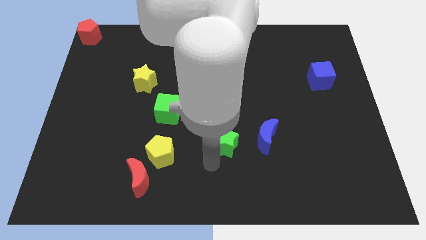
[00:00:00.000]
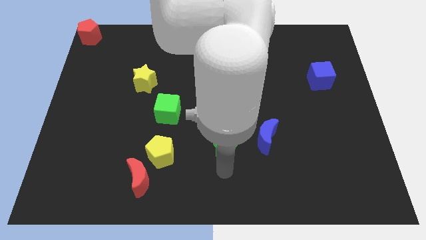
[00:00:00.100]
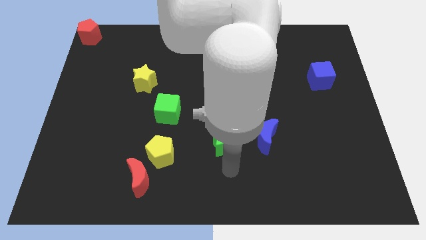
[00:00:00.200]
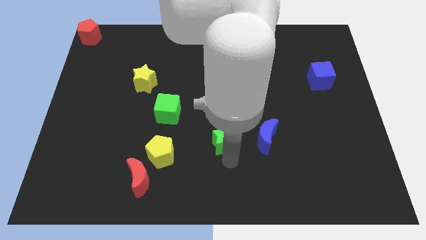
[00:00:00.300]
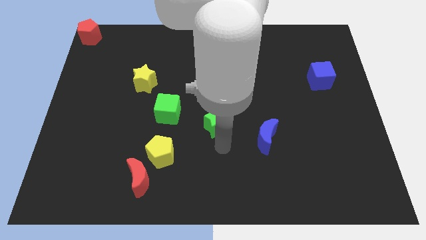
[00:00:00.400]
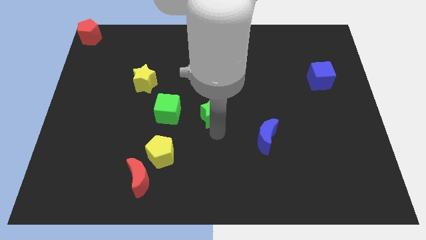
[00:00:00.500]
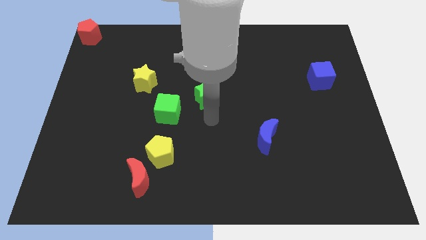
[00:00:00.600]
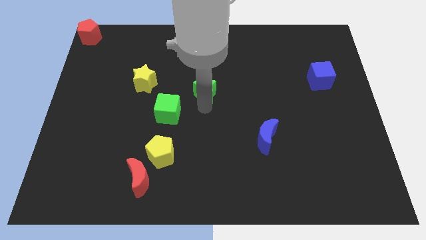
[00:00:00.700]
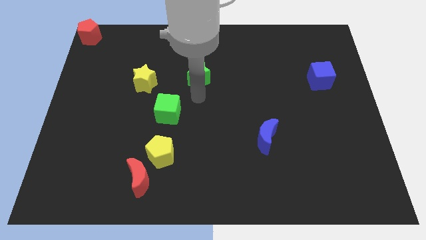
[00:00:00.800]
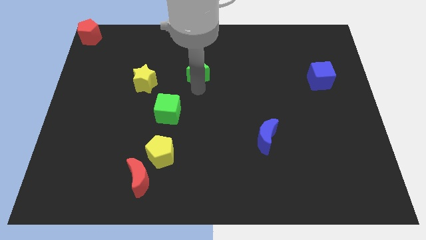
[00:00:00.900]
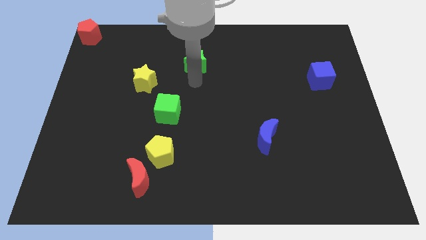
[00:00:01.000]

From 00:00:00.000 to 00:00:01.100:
slide green star to the top right of yellow star

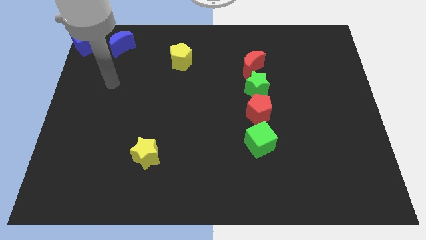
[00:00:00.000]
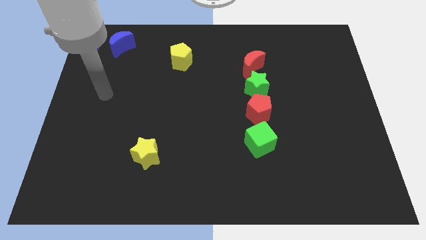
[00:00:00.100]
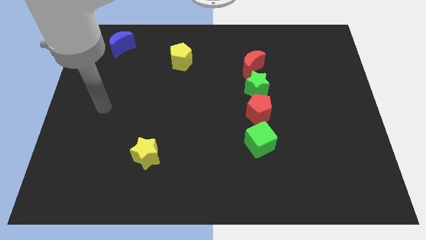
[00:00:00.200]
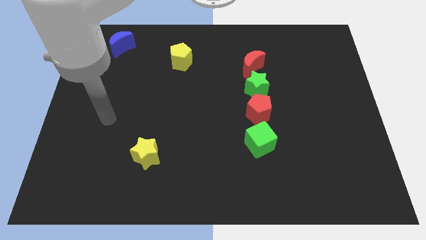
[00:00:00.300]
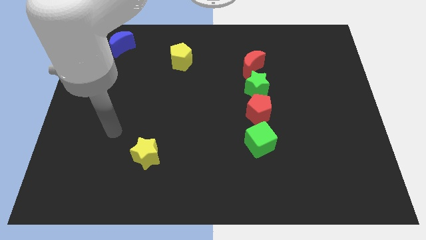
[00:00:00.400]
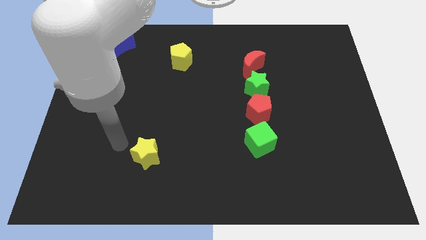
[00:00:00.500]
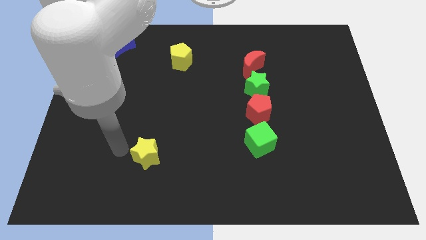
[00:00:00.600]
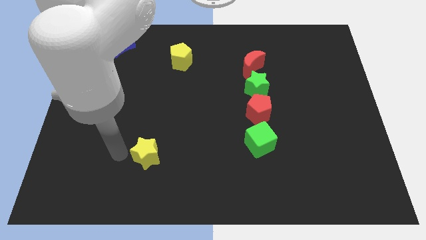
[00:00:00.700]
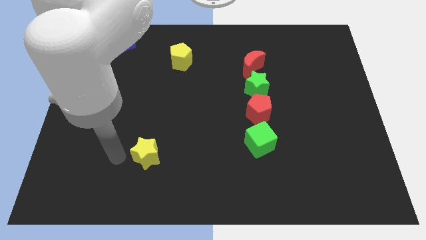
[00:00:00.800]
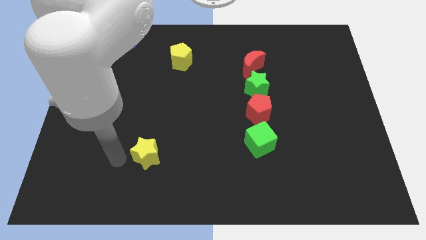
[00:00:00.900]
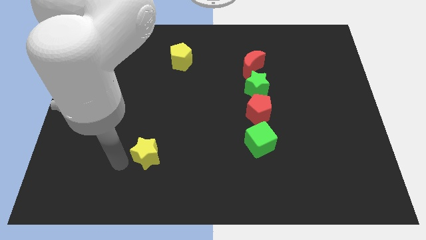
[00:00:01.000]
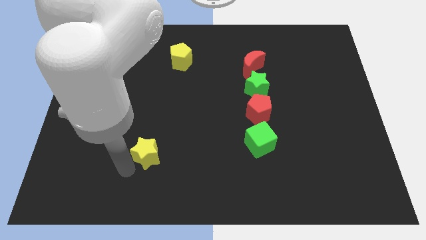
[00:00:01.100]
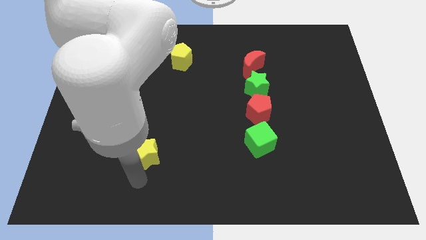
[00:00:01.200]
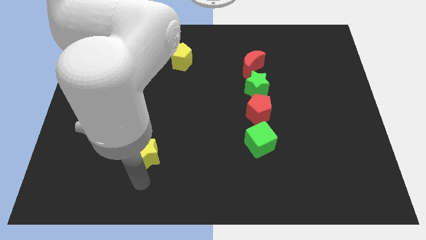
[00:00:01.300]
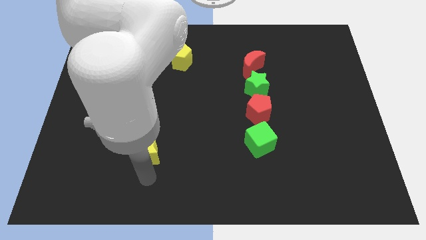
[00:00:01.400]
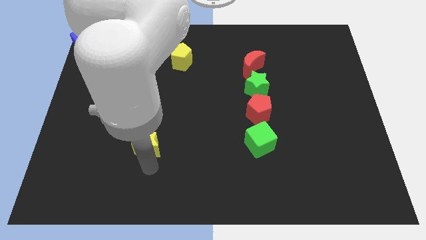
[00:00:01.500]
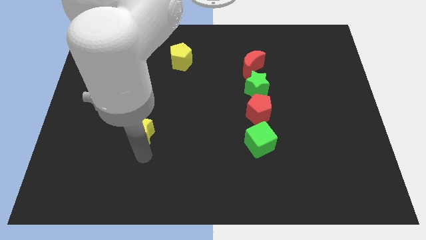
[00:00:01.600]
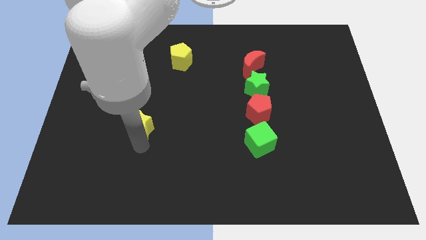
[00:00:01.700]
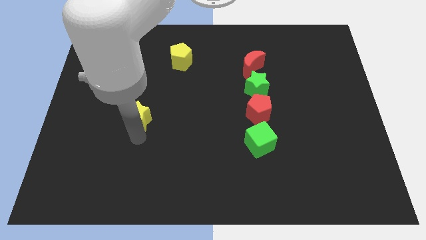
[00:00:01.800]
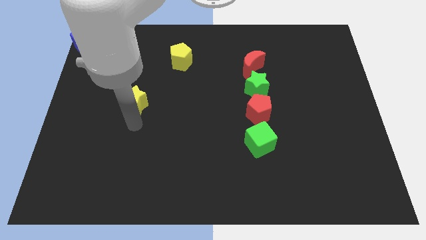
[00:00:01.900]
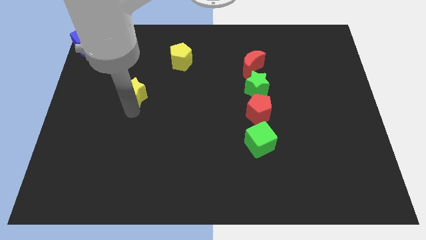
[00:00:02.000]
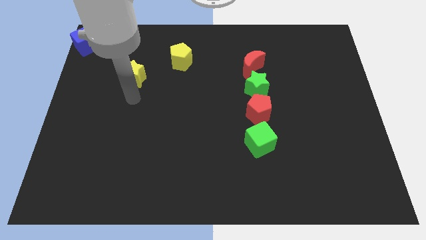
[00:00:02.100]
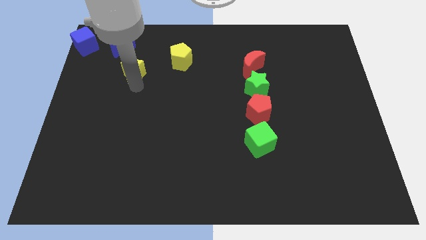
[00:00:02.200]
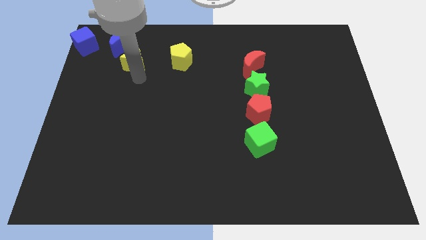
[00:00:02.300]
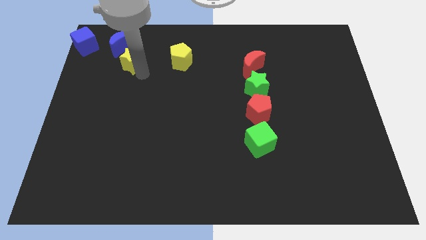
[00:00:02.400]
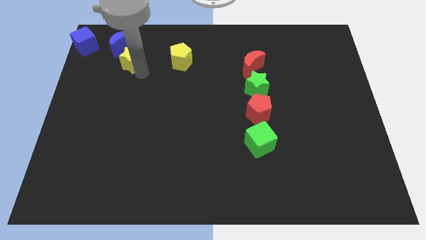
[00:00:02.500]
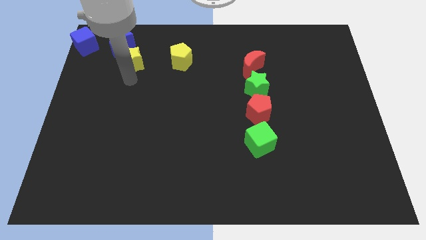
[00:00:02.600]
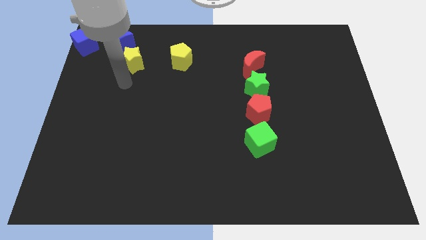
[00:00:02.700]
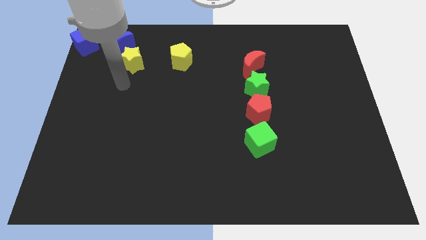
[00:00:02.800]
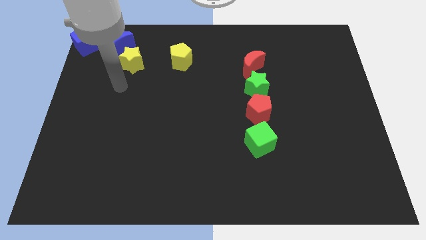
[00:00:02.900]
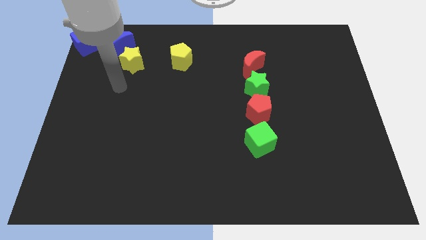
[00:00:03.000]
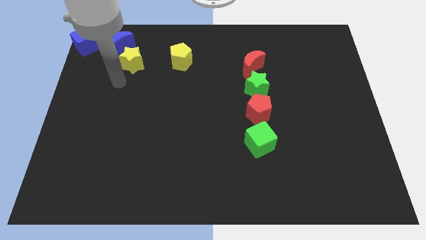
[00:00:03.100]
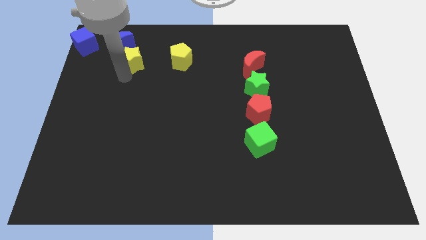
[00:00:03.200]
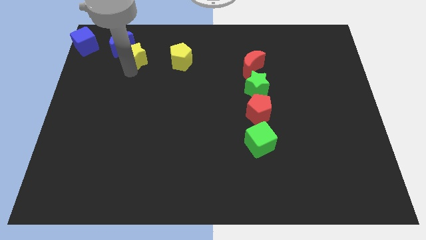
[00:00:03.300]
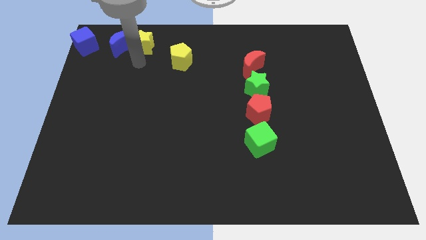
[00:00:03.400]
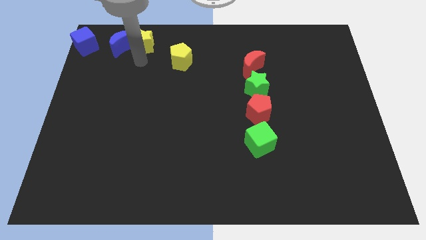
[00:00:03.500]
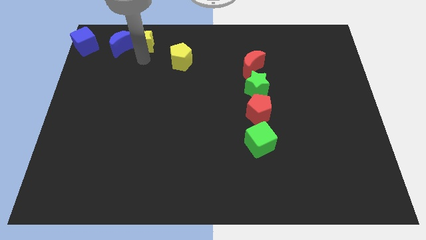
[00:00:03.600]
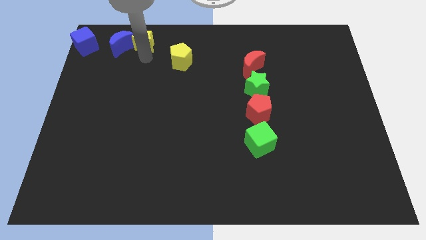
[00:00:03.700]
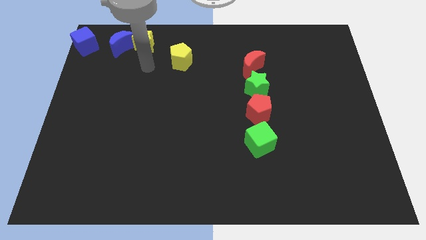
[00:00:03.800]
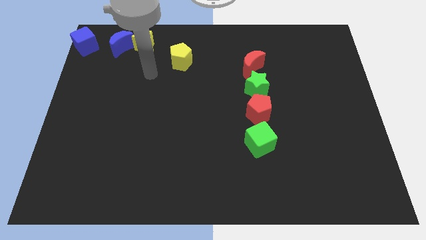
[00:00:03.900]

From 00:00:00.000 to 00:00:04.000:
place the yellow star right to the blue moon

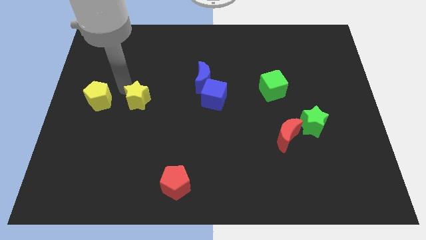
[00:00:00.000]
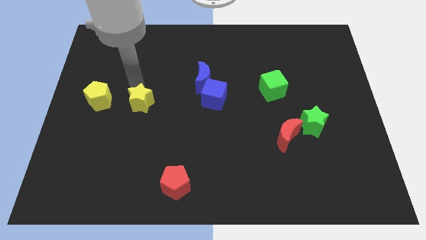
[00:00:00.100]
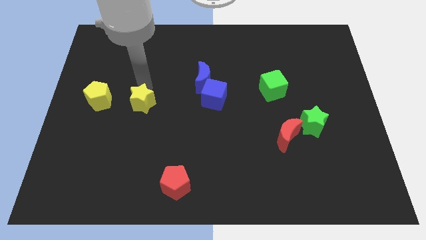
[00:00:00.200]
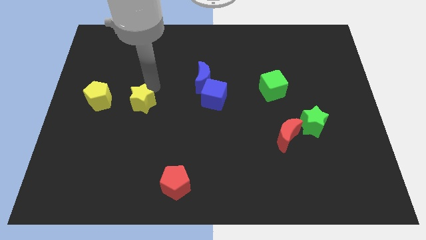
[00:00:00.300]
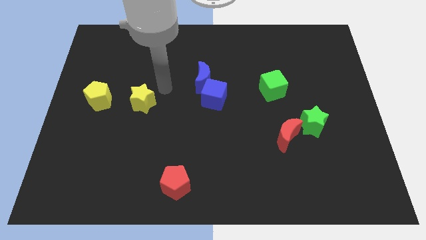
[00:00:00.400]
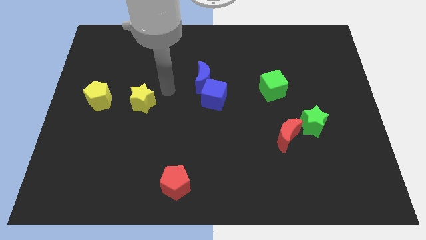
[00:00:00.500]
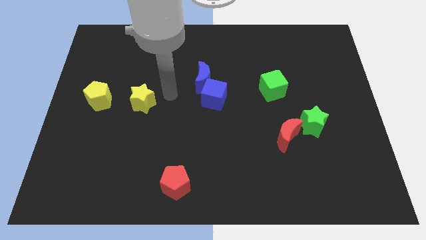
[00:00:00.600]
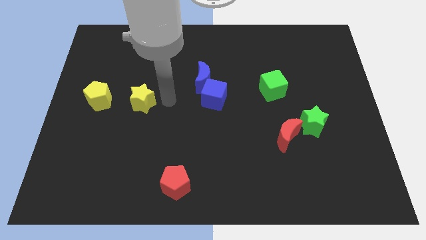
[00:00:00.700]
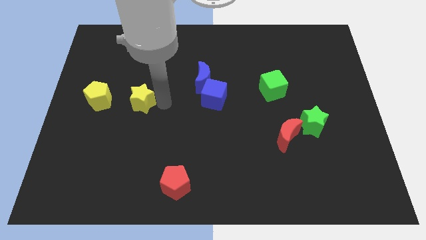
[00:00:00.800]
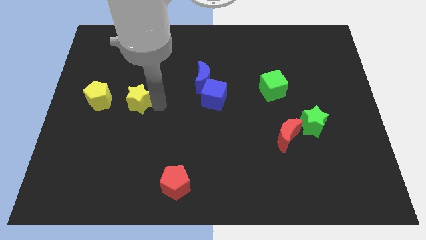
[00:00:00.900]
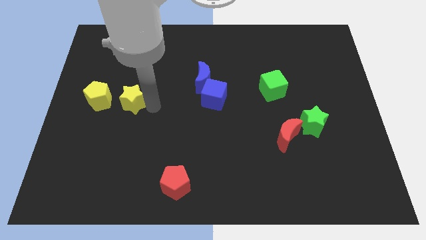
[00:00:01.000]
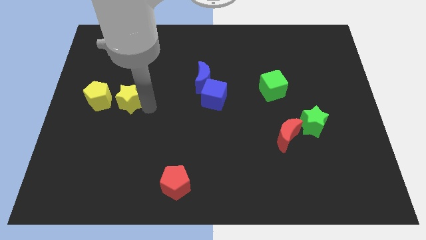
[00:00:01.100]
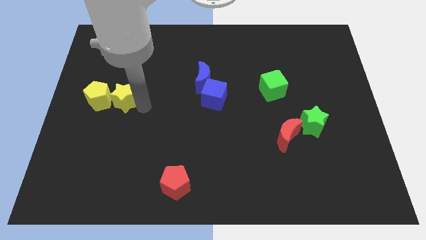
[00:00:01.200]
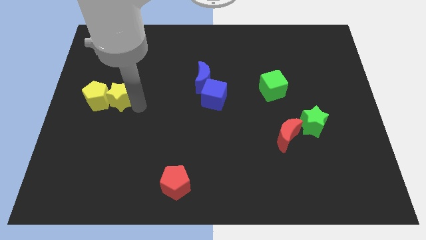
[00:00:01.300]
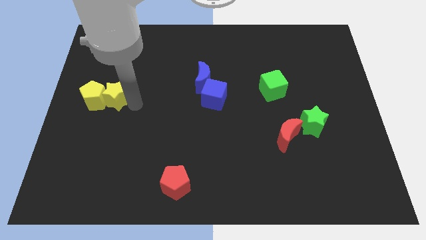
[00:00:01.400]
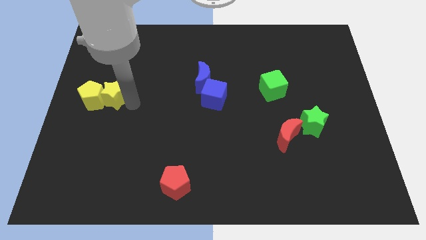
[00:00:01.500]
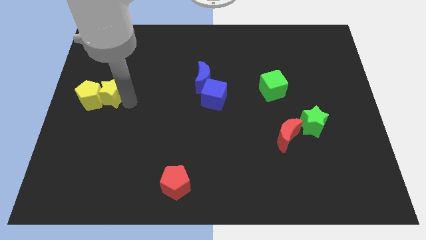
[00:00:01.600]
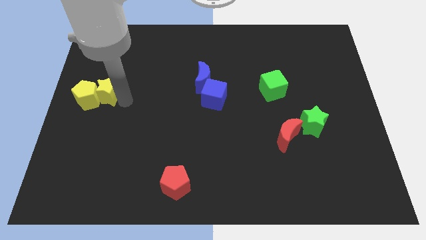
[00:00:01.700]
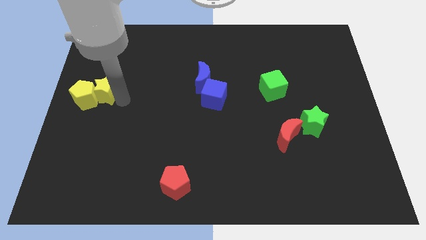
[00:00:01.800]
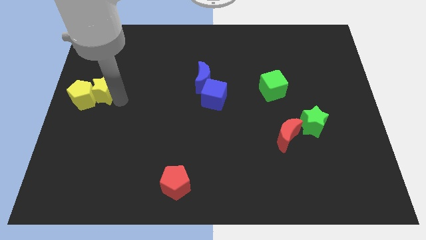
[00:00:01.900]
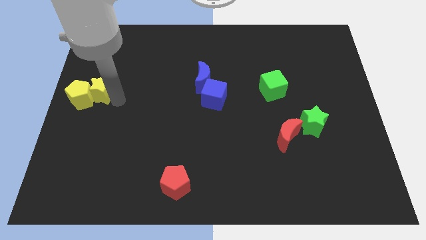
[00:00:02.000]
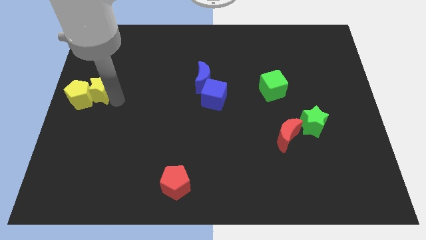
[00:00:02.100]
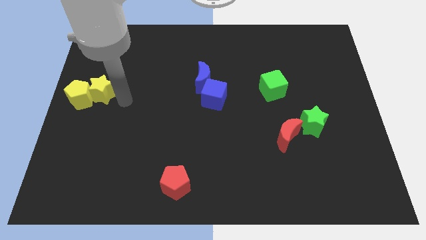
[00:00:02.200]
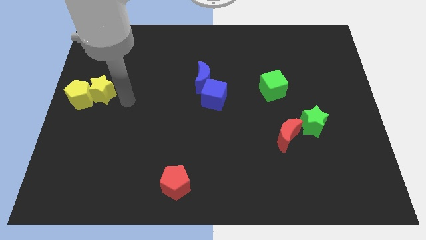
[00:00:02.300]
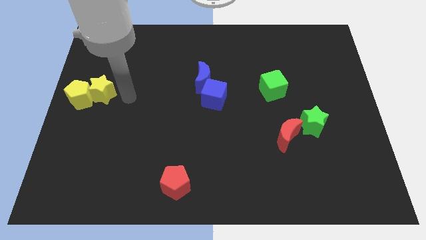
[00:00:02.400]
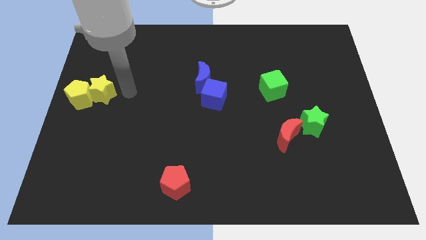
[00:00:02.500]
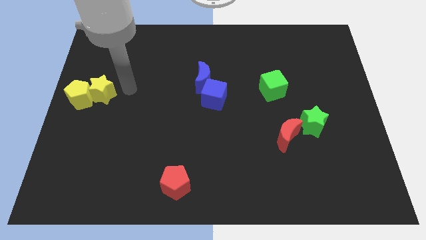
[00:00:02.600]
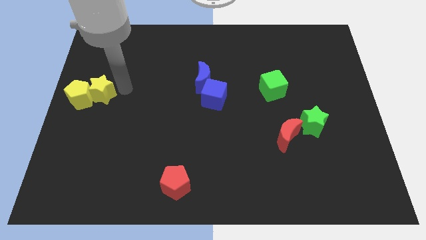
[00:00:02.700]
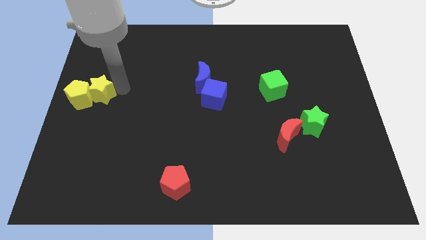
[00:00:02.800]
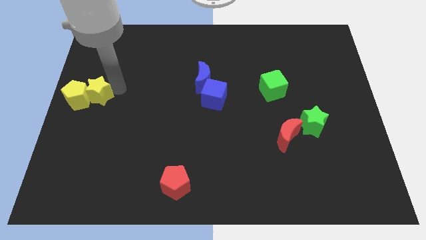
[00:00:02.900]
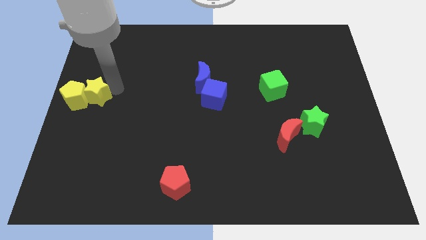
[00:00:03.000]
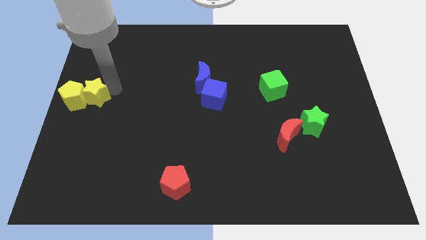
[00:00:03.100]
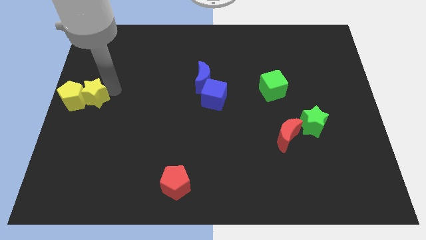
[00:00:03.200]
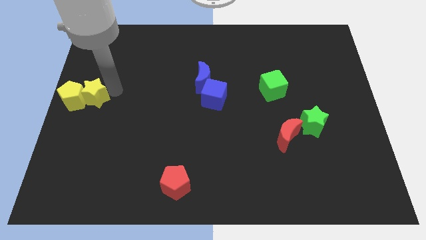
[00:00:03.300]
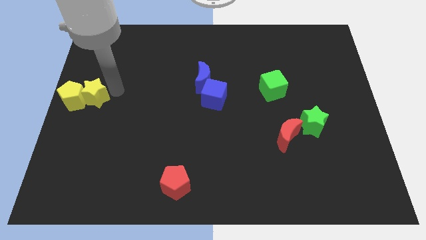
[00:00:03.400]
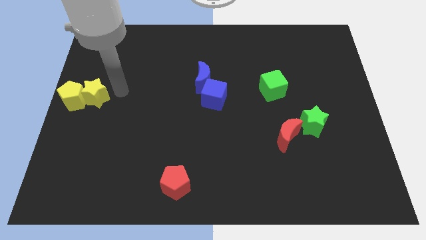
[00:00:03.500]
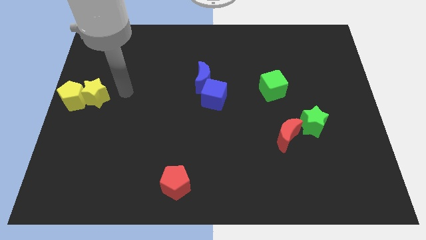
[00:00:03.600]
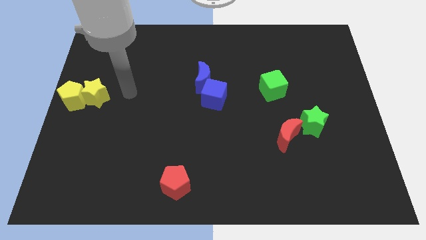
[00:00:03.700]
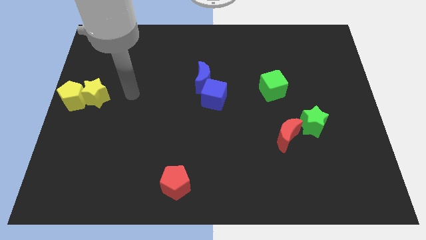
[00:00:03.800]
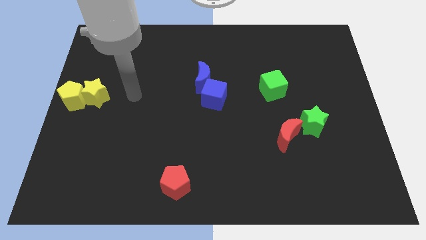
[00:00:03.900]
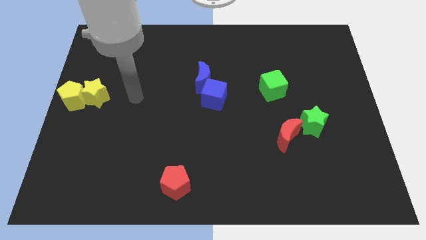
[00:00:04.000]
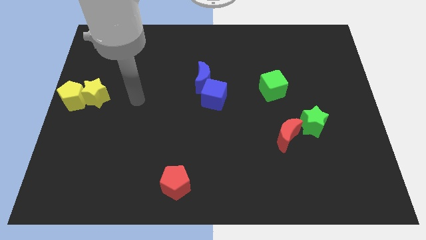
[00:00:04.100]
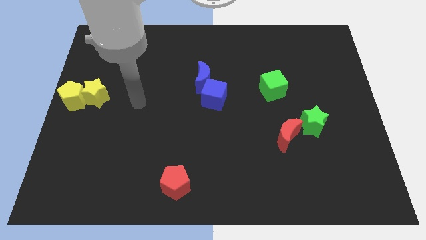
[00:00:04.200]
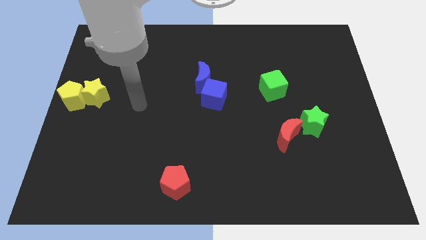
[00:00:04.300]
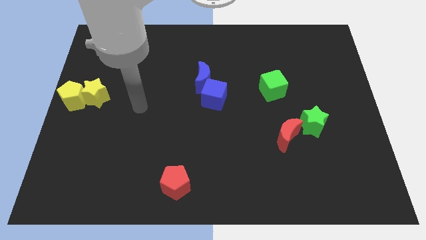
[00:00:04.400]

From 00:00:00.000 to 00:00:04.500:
move the yellow star and yellow pentagon towards the center left side of the board
